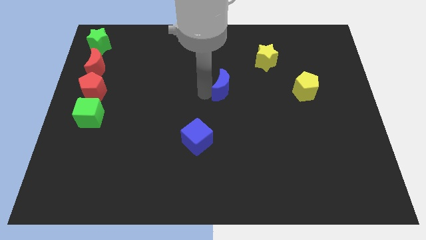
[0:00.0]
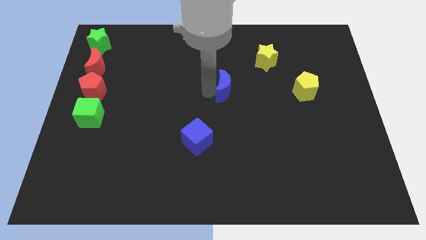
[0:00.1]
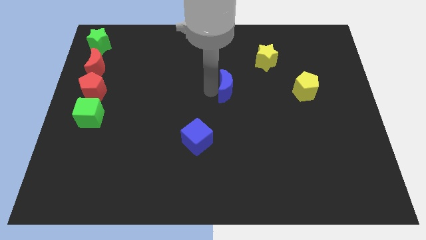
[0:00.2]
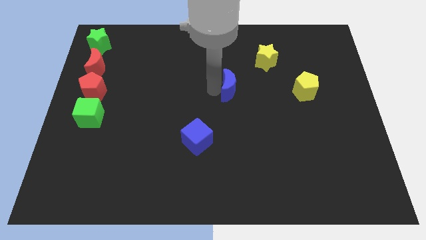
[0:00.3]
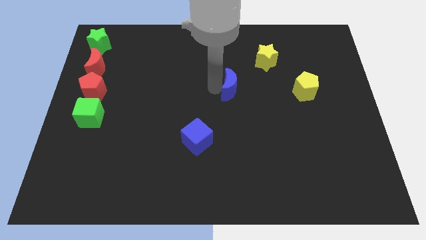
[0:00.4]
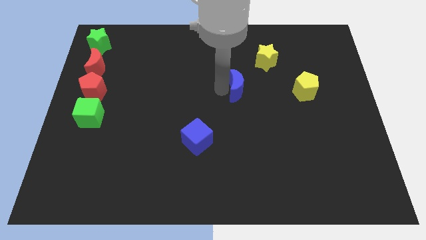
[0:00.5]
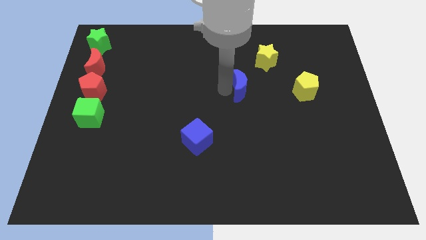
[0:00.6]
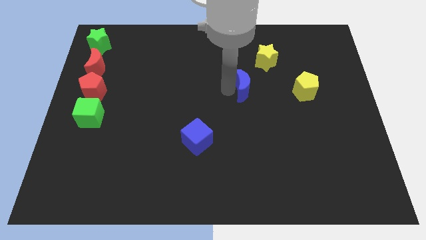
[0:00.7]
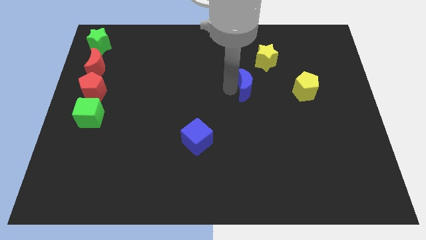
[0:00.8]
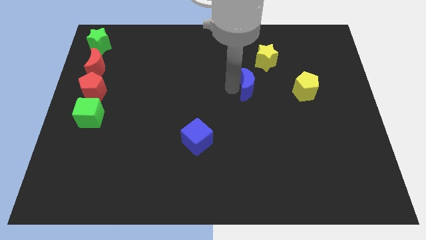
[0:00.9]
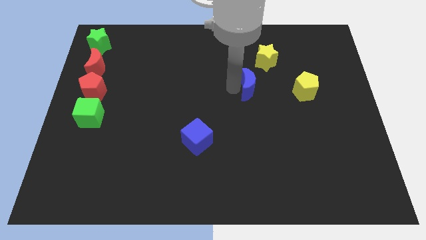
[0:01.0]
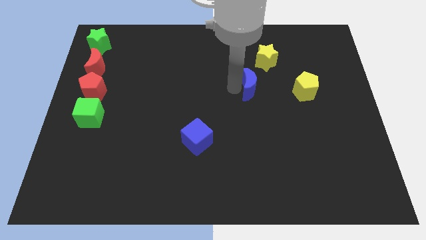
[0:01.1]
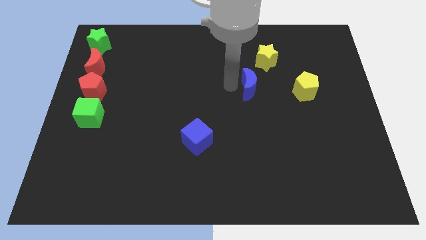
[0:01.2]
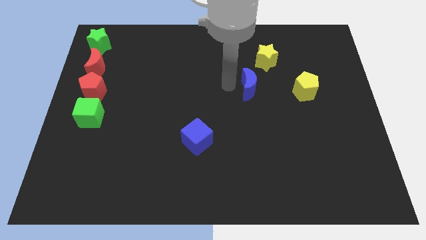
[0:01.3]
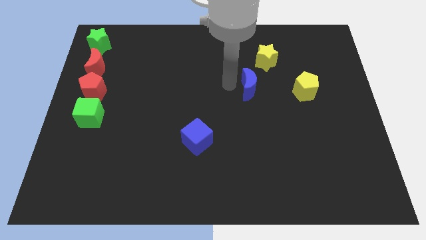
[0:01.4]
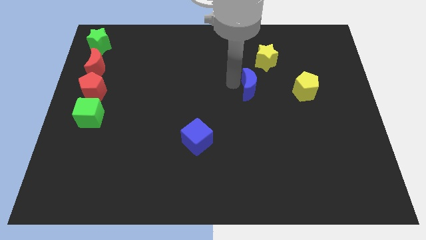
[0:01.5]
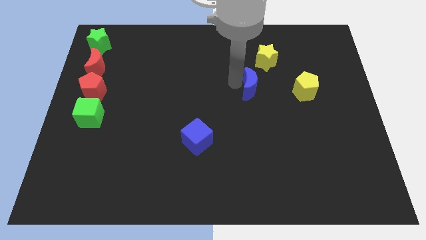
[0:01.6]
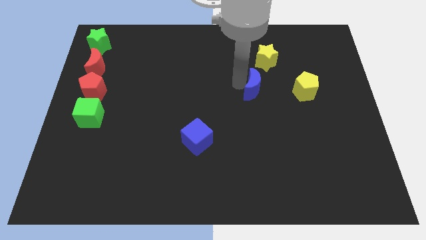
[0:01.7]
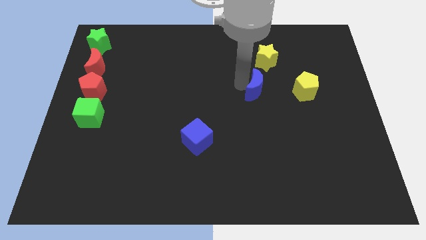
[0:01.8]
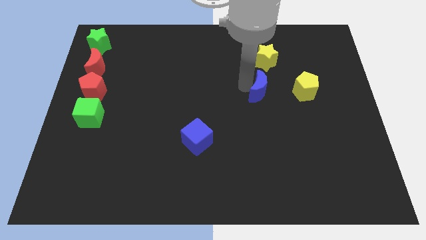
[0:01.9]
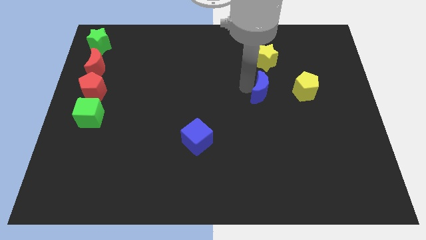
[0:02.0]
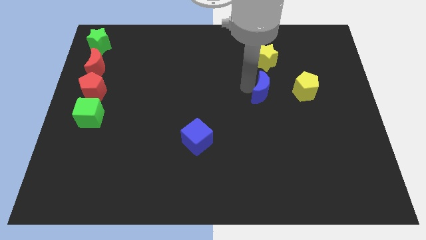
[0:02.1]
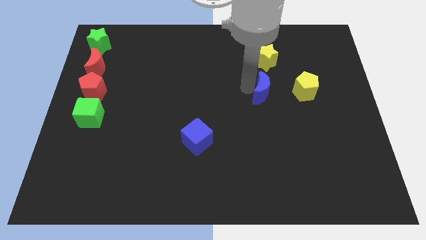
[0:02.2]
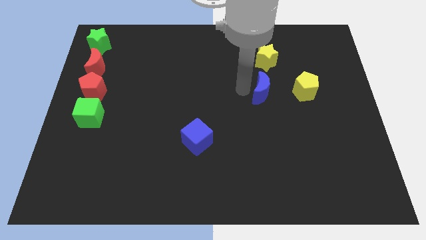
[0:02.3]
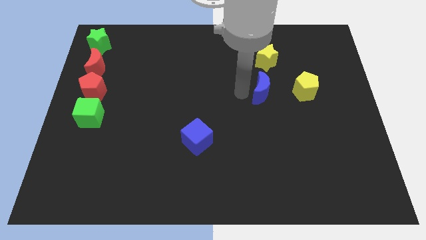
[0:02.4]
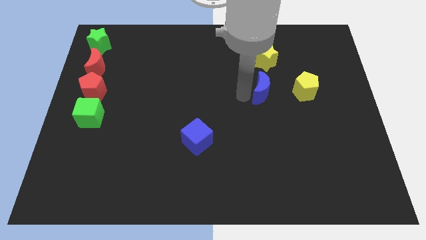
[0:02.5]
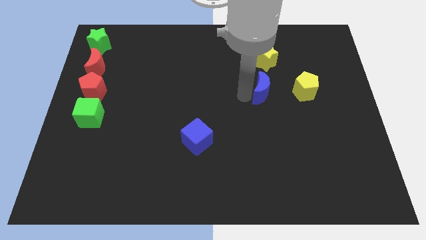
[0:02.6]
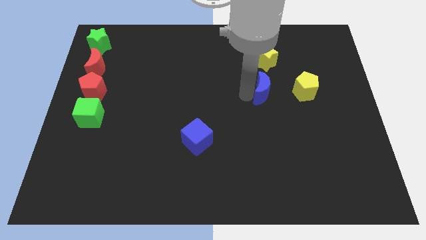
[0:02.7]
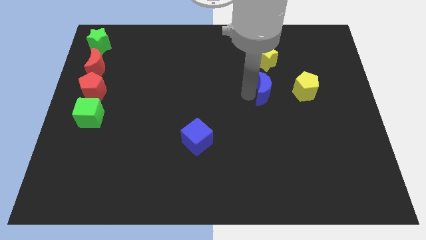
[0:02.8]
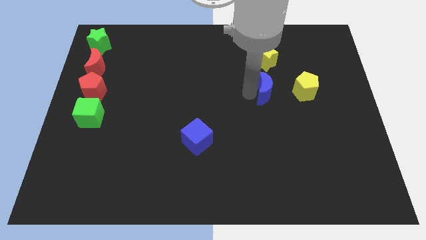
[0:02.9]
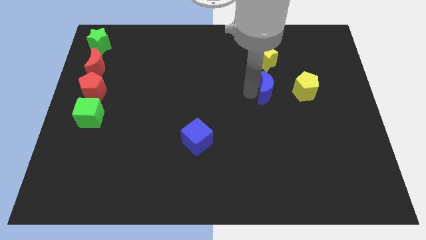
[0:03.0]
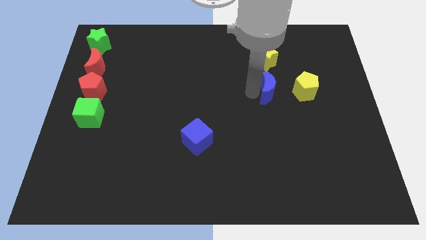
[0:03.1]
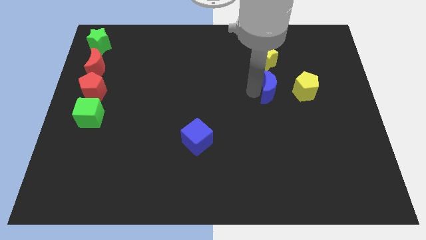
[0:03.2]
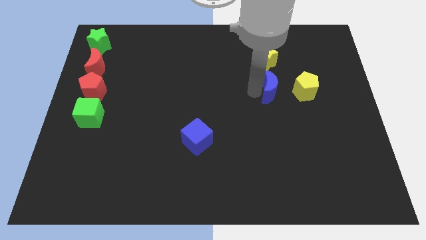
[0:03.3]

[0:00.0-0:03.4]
push blue crescent below yellow star

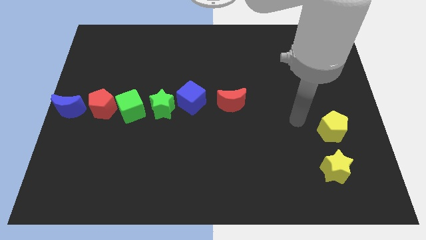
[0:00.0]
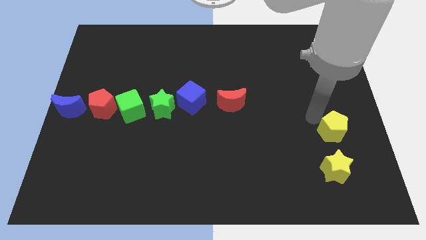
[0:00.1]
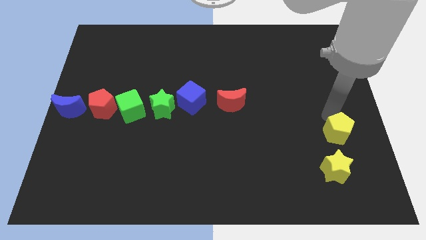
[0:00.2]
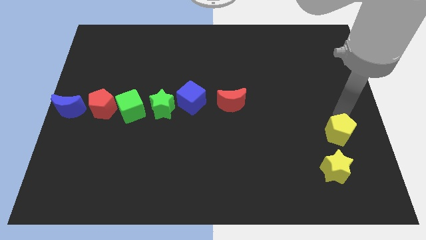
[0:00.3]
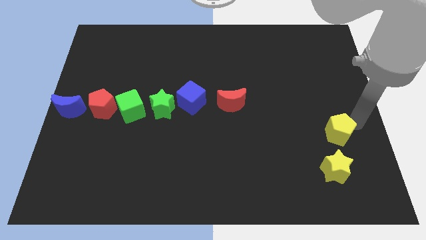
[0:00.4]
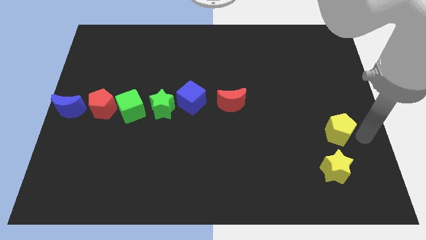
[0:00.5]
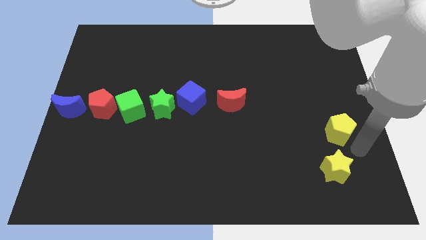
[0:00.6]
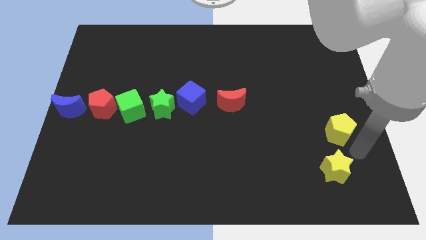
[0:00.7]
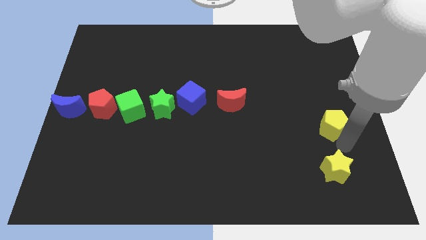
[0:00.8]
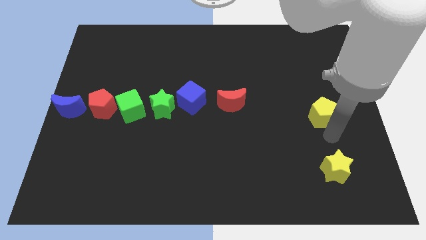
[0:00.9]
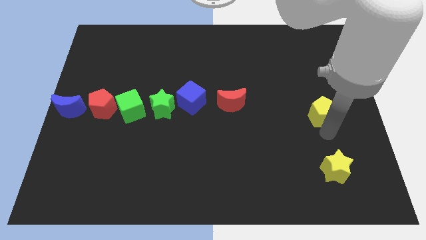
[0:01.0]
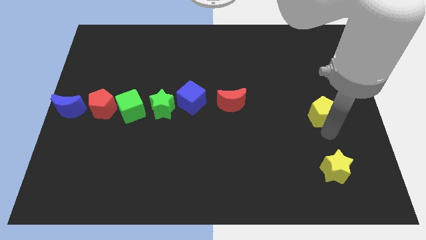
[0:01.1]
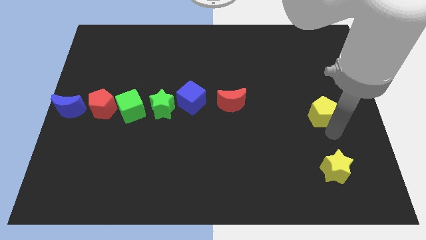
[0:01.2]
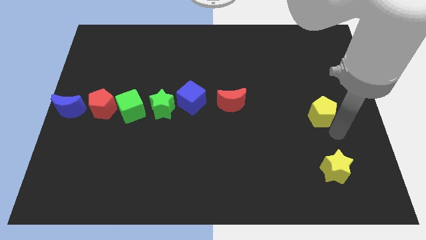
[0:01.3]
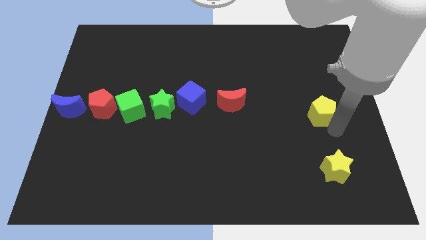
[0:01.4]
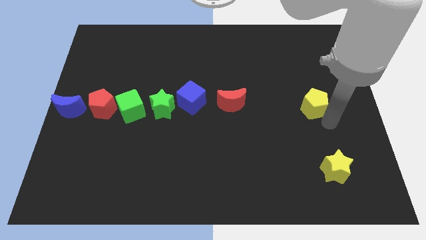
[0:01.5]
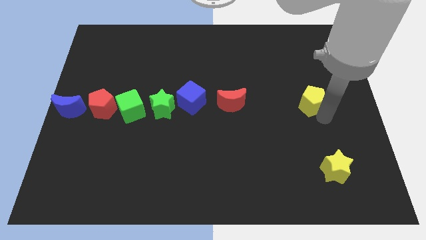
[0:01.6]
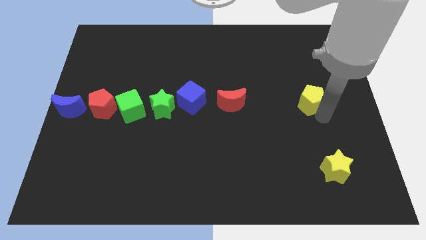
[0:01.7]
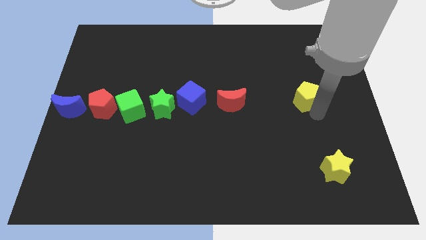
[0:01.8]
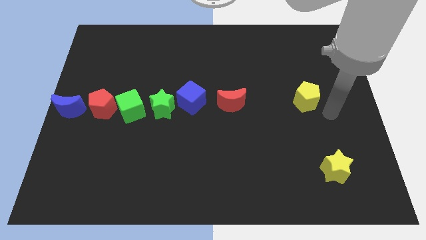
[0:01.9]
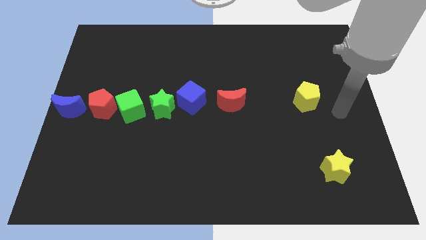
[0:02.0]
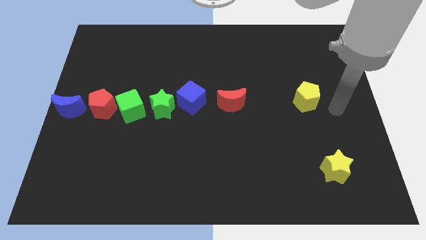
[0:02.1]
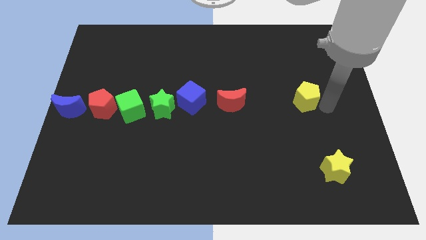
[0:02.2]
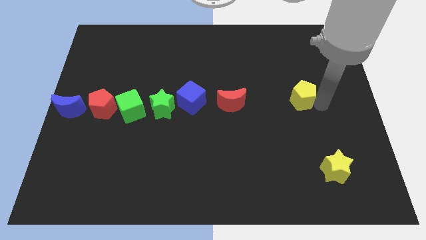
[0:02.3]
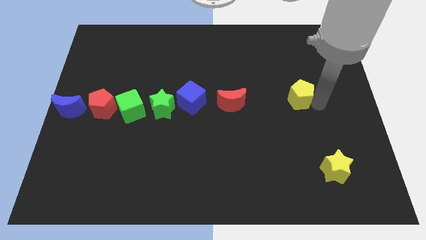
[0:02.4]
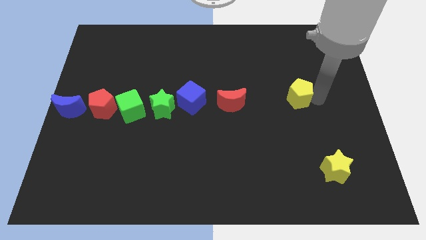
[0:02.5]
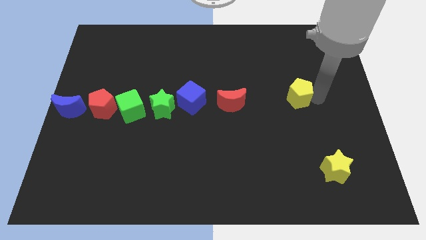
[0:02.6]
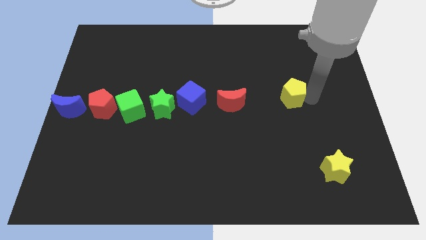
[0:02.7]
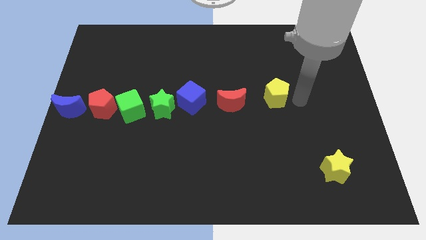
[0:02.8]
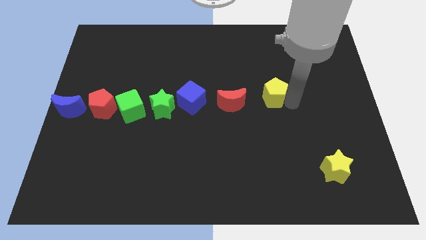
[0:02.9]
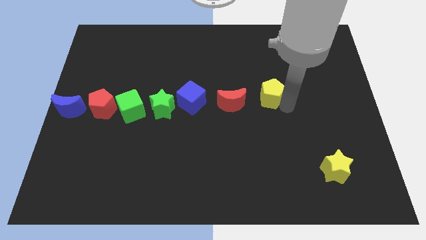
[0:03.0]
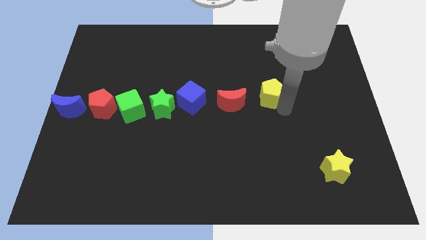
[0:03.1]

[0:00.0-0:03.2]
place the yellow pentagon at the right side of the red moon horizontally

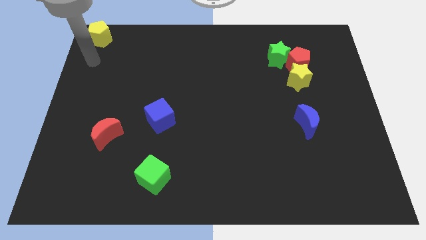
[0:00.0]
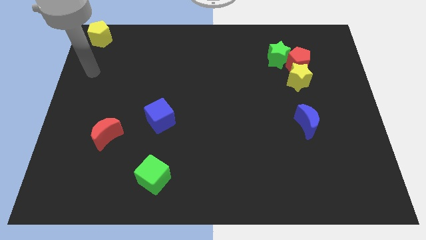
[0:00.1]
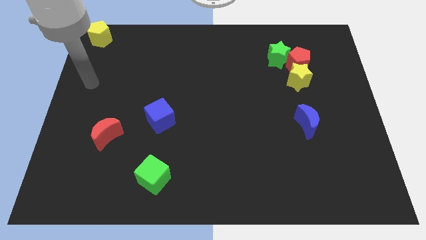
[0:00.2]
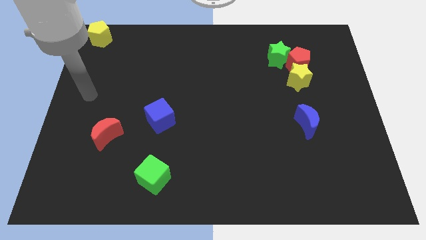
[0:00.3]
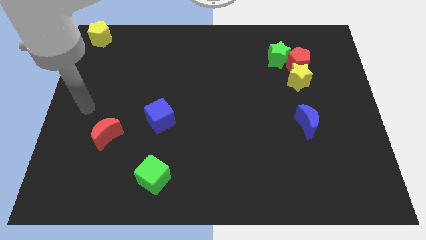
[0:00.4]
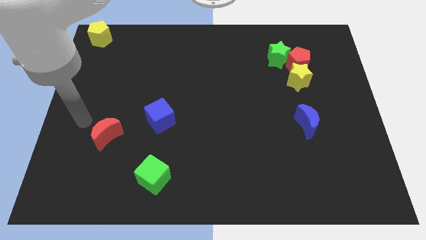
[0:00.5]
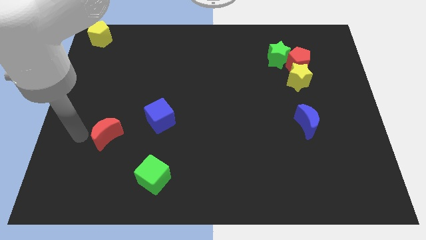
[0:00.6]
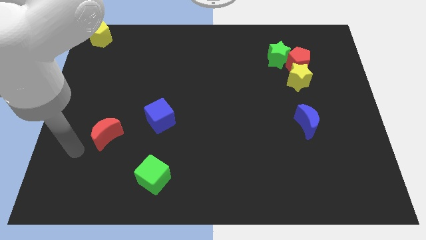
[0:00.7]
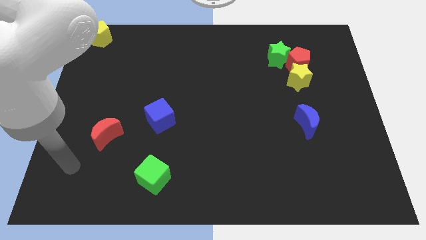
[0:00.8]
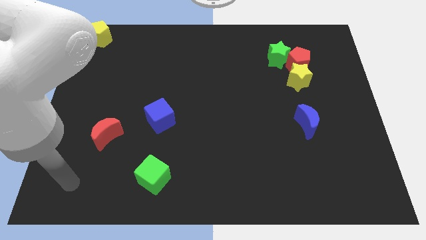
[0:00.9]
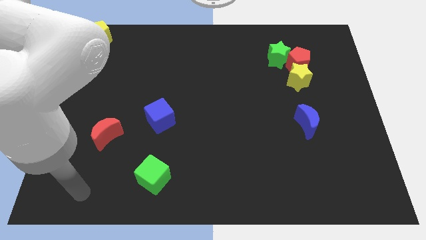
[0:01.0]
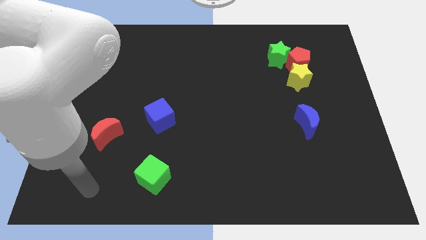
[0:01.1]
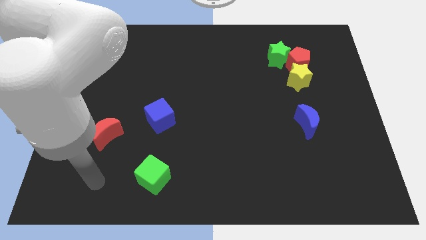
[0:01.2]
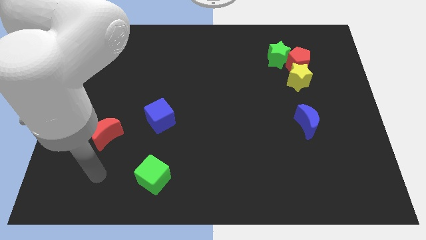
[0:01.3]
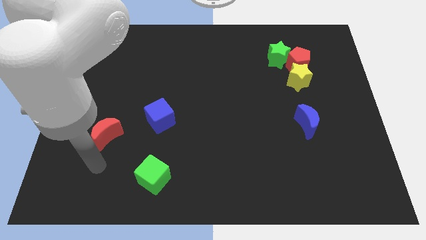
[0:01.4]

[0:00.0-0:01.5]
move your arm towards the red crescent

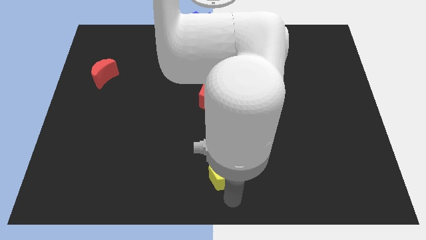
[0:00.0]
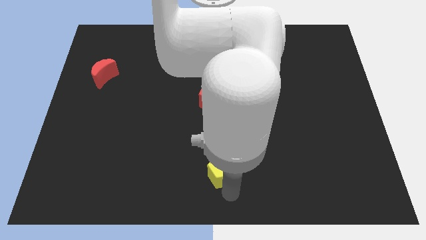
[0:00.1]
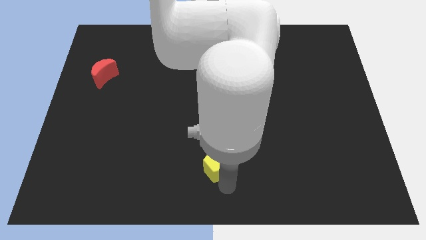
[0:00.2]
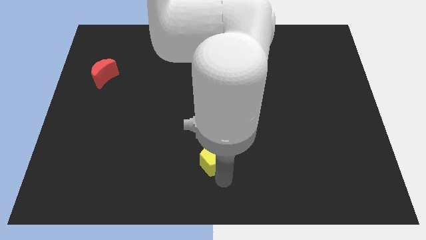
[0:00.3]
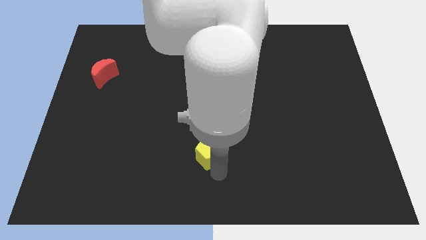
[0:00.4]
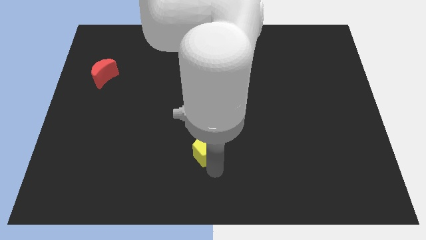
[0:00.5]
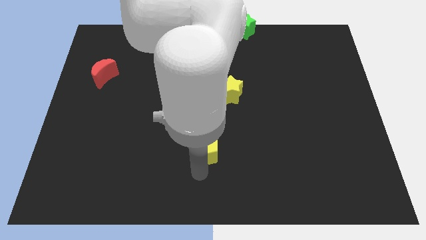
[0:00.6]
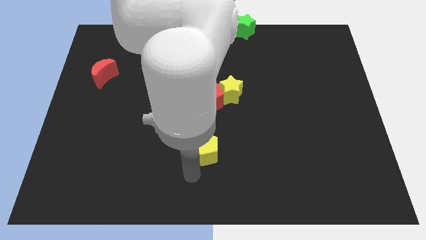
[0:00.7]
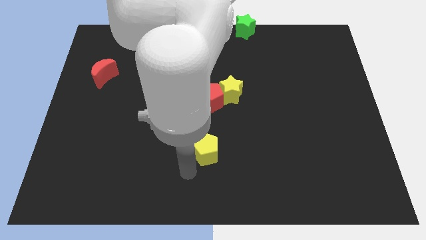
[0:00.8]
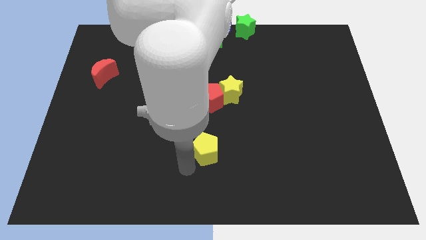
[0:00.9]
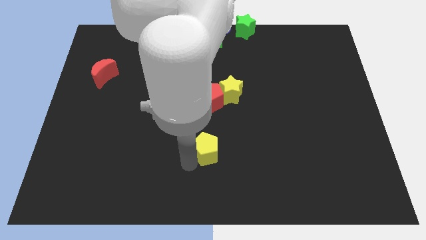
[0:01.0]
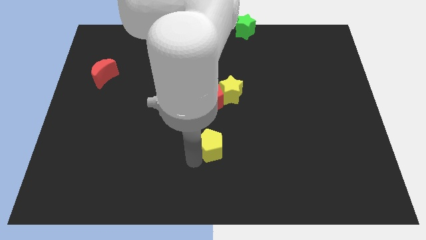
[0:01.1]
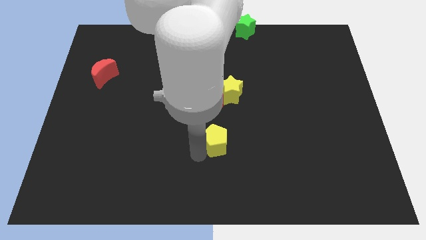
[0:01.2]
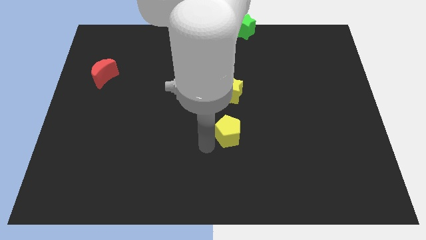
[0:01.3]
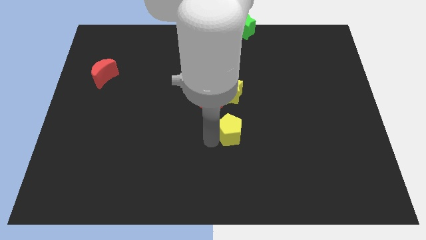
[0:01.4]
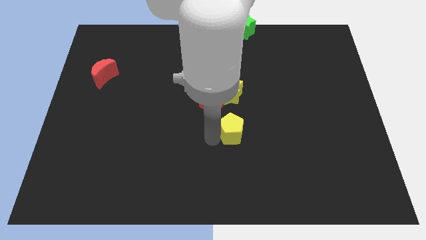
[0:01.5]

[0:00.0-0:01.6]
place the yellow pentagon below the yellow star
